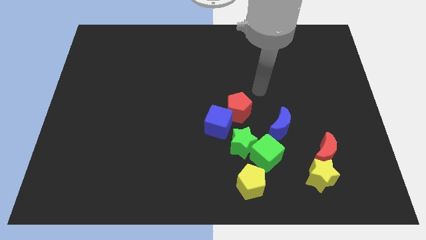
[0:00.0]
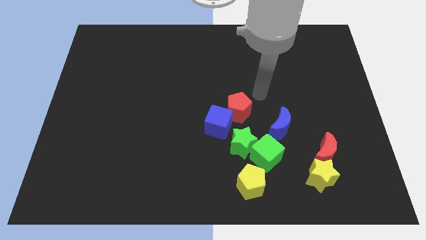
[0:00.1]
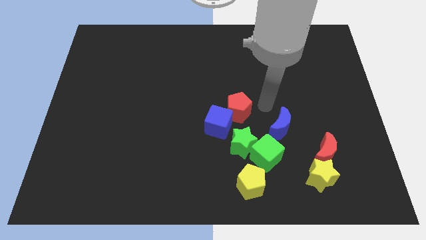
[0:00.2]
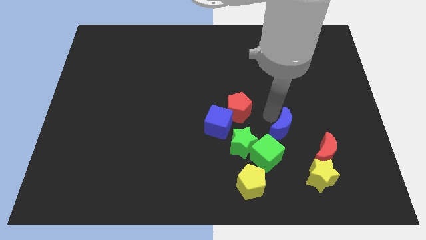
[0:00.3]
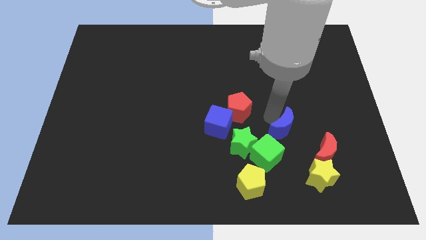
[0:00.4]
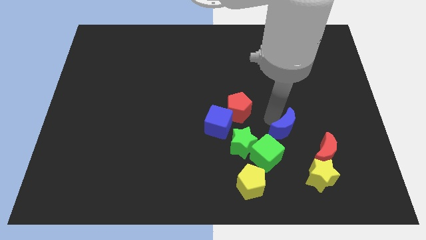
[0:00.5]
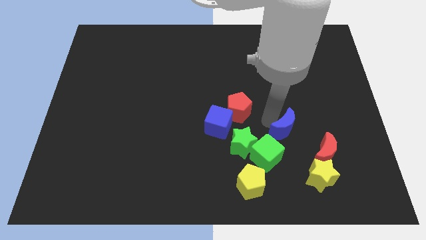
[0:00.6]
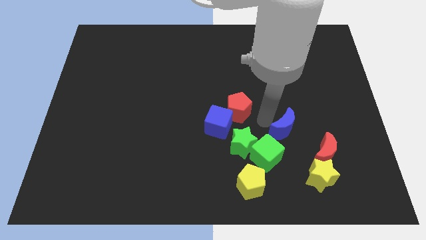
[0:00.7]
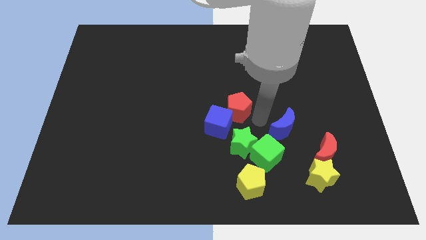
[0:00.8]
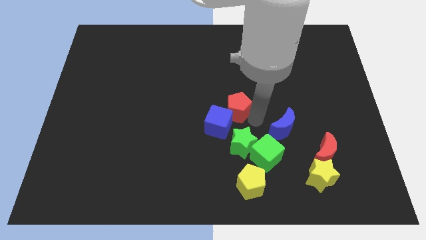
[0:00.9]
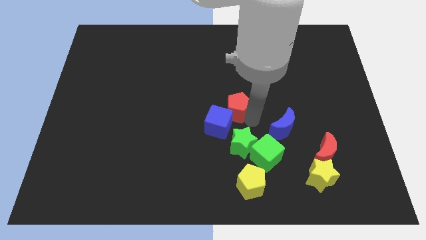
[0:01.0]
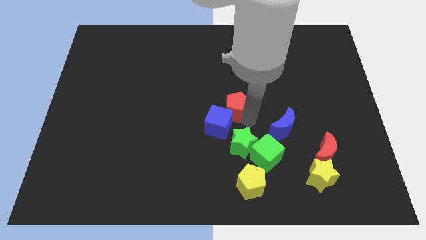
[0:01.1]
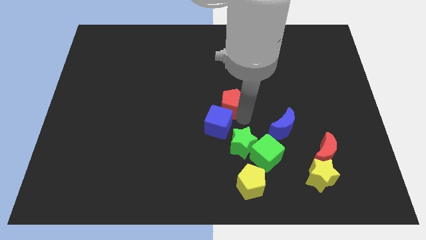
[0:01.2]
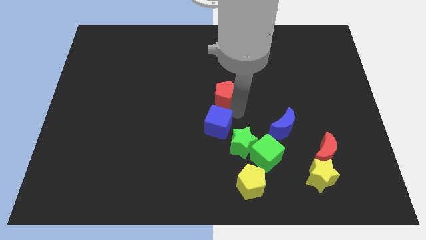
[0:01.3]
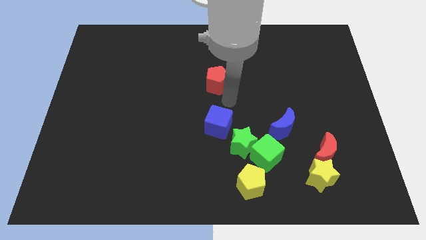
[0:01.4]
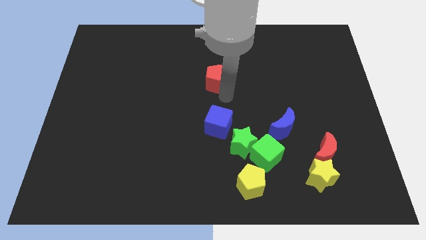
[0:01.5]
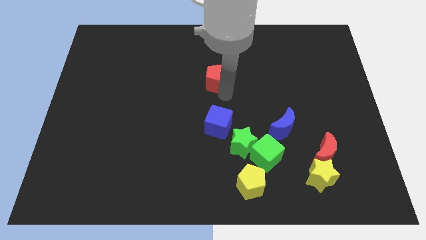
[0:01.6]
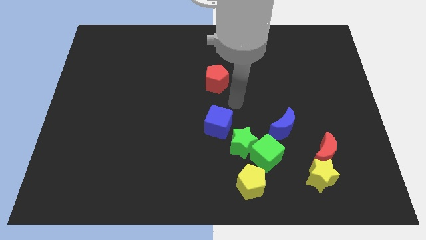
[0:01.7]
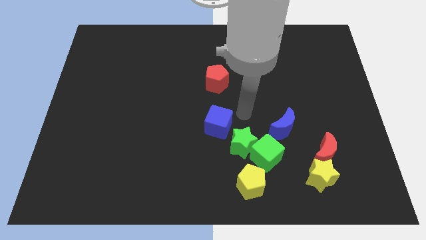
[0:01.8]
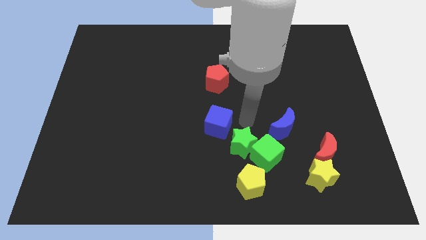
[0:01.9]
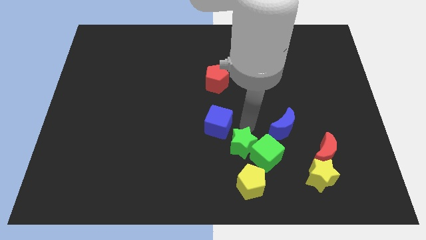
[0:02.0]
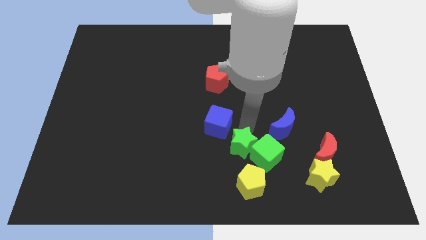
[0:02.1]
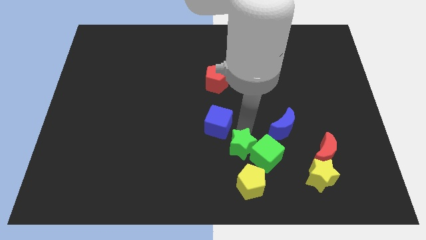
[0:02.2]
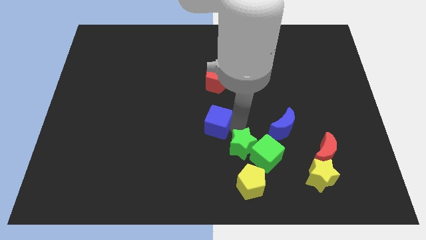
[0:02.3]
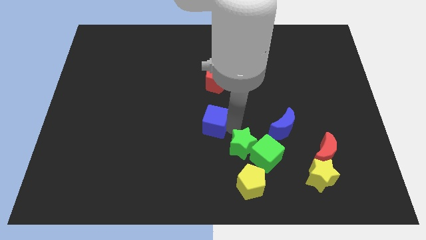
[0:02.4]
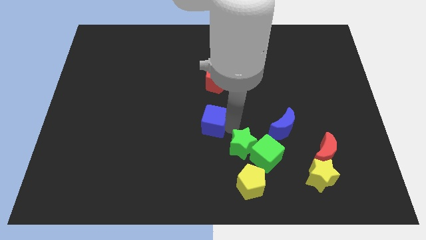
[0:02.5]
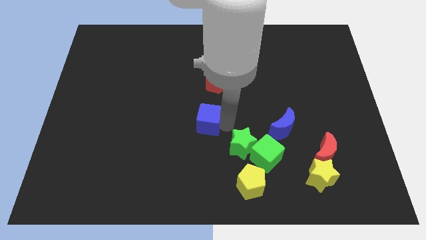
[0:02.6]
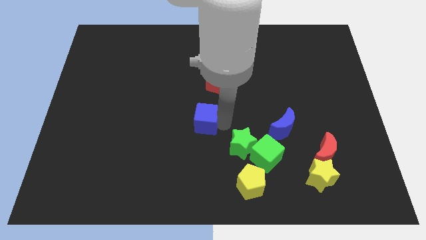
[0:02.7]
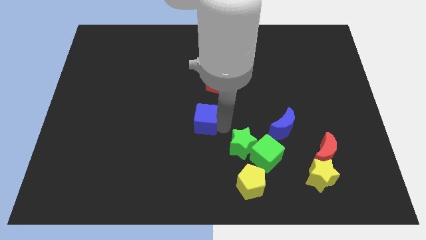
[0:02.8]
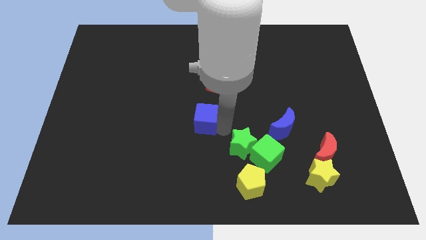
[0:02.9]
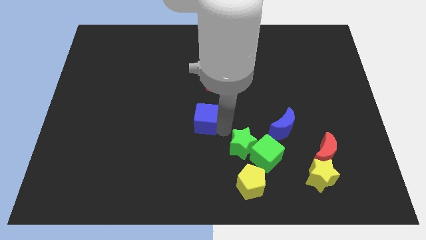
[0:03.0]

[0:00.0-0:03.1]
move the blue cube to the center of the board

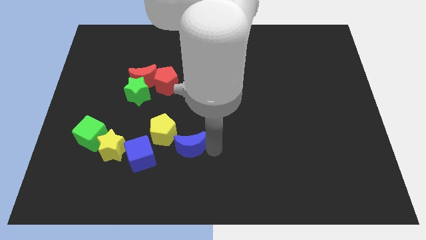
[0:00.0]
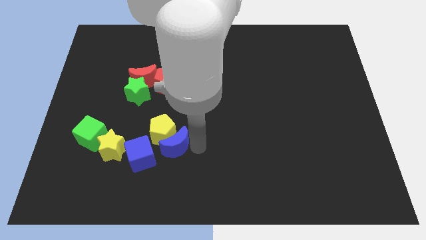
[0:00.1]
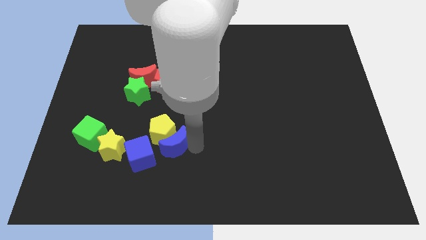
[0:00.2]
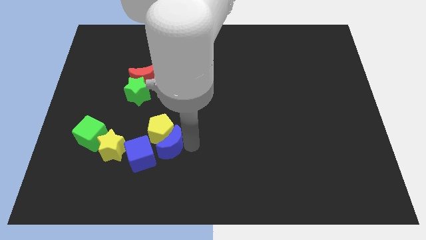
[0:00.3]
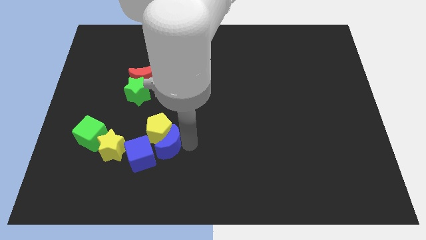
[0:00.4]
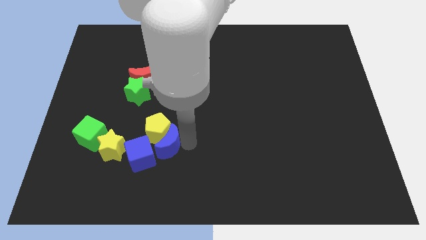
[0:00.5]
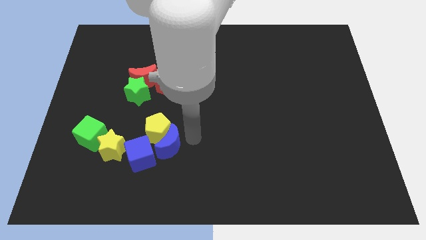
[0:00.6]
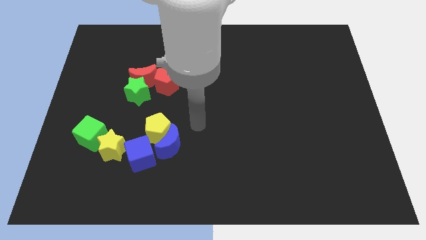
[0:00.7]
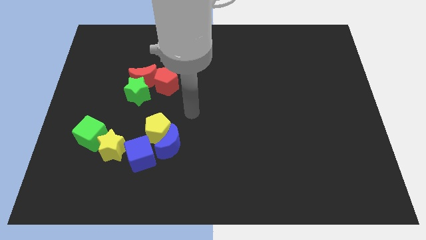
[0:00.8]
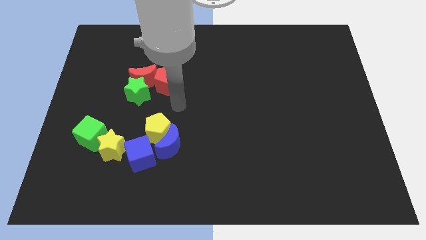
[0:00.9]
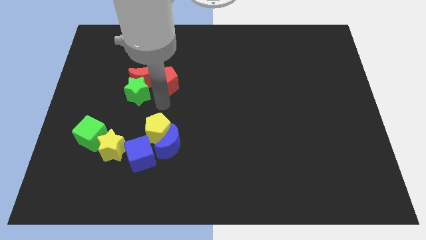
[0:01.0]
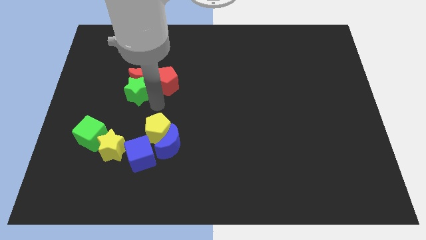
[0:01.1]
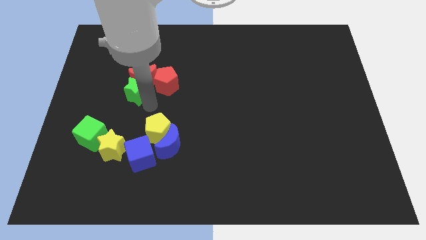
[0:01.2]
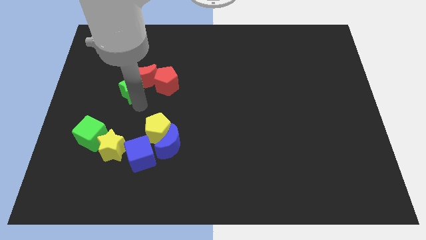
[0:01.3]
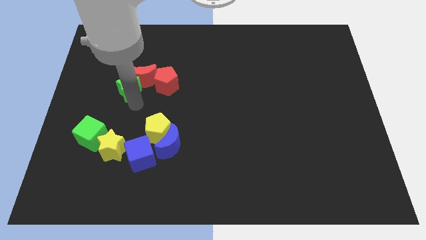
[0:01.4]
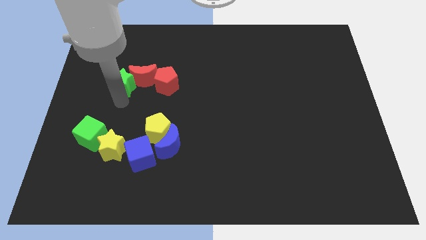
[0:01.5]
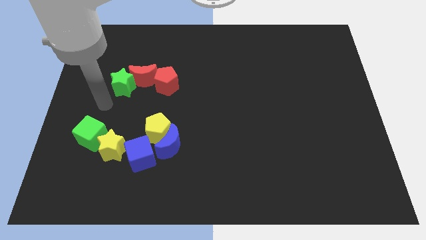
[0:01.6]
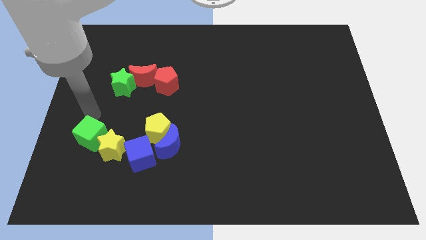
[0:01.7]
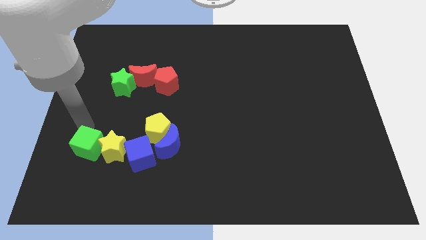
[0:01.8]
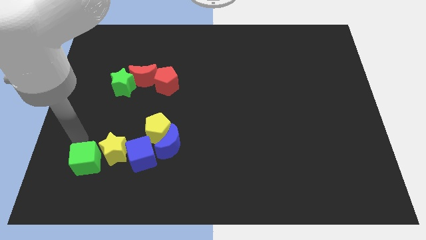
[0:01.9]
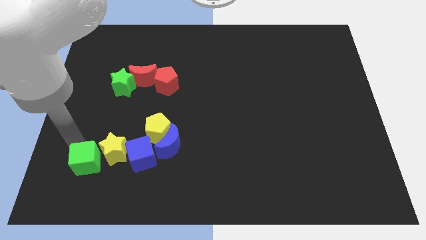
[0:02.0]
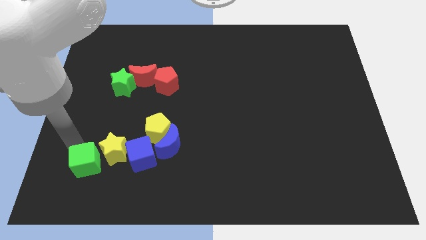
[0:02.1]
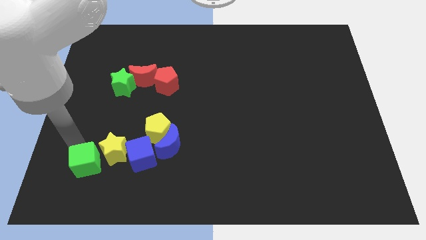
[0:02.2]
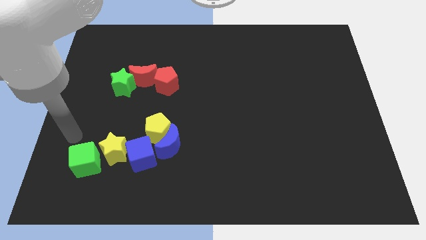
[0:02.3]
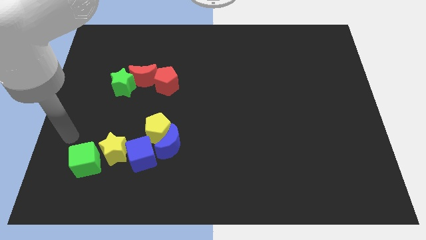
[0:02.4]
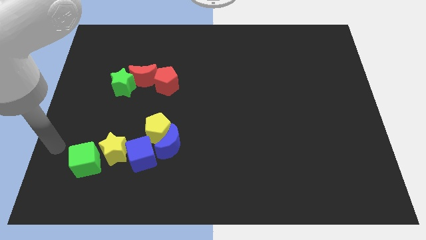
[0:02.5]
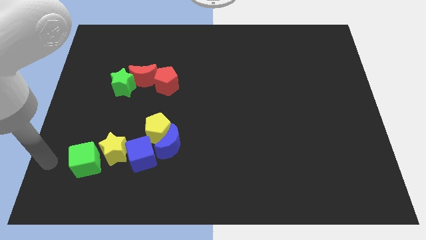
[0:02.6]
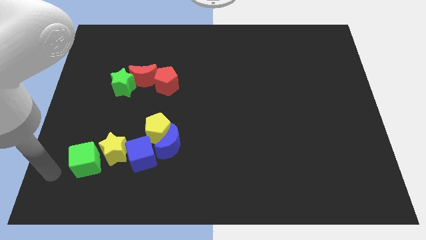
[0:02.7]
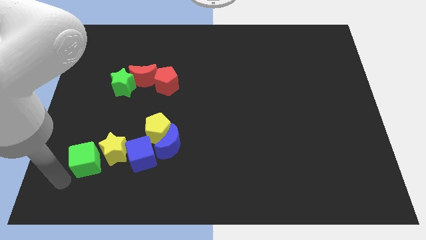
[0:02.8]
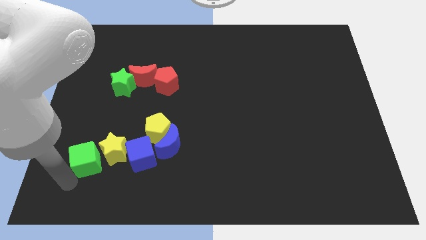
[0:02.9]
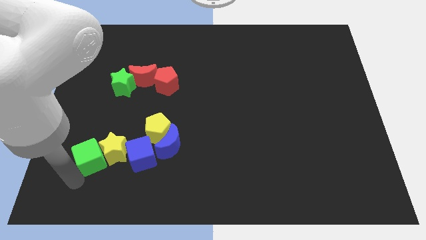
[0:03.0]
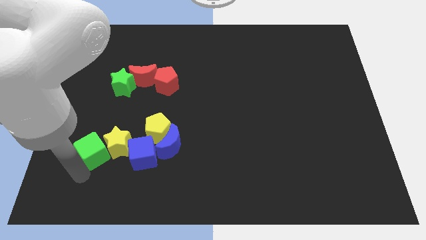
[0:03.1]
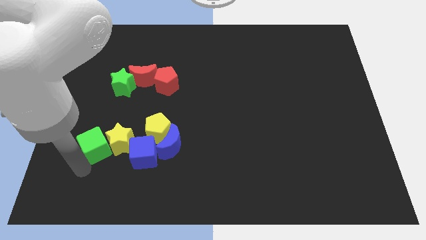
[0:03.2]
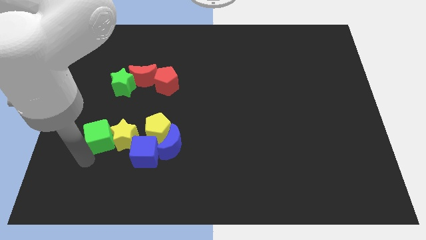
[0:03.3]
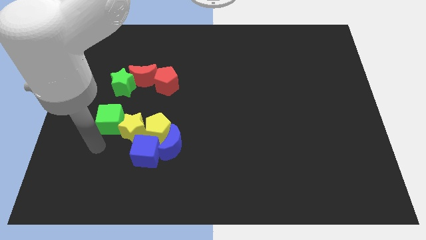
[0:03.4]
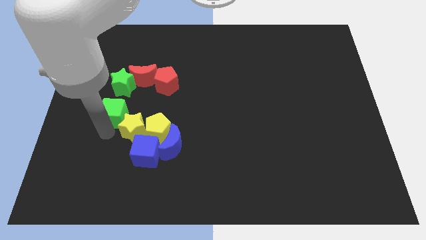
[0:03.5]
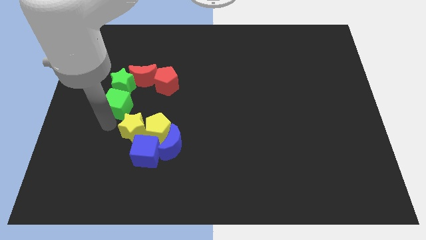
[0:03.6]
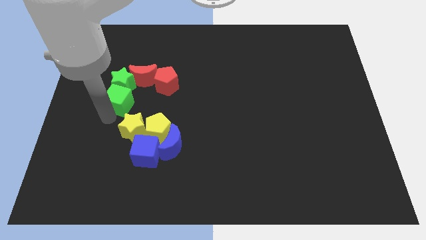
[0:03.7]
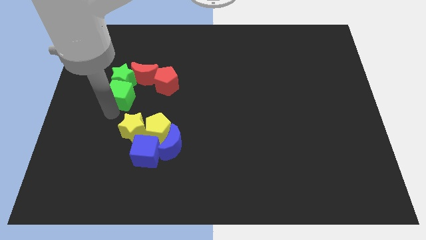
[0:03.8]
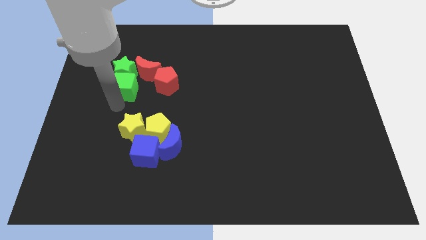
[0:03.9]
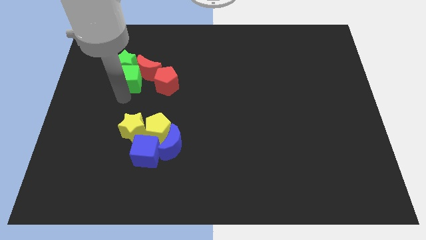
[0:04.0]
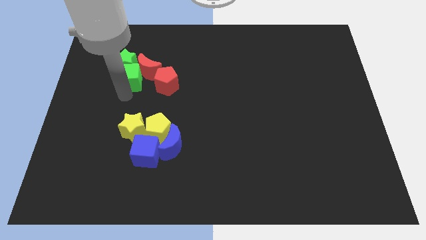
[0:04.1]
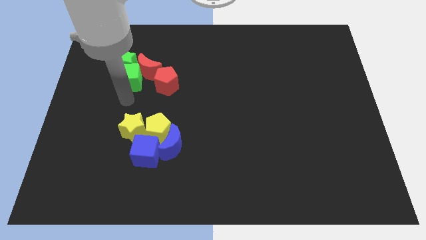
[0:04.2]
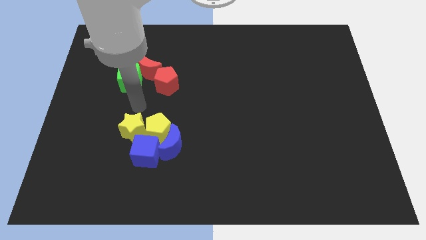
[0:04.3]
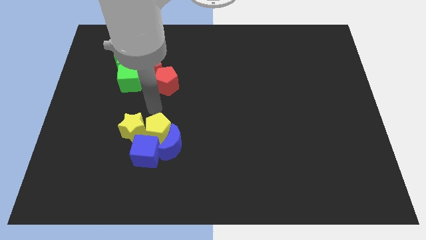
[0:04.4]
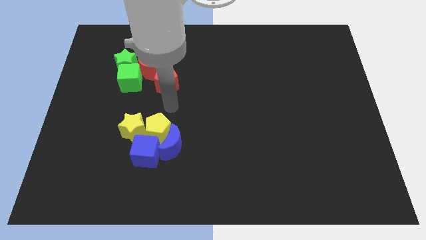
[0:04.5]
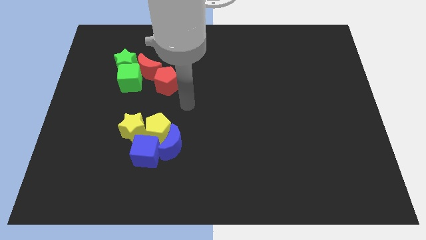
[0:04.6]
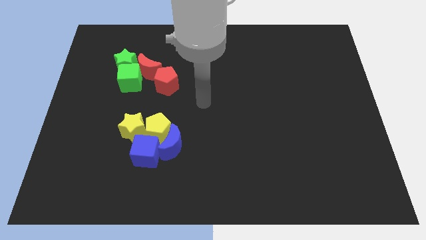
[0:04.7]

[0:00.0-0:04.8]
separate red blocks green blocks and yellow blocks blue blocks

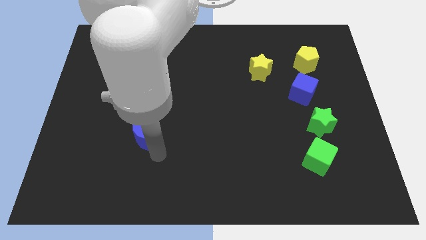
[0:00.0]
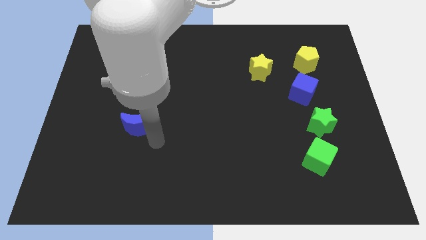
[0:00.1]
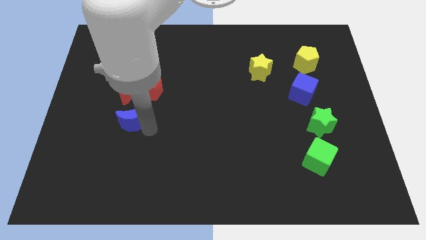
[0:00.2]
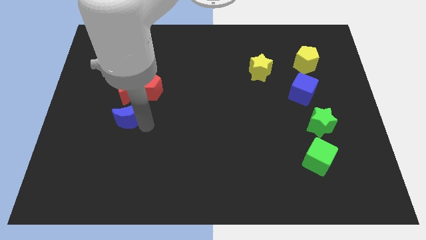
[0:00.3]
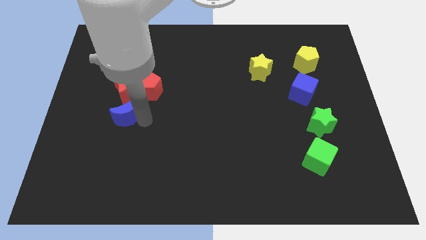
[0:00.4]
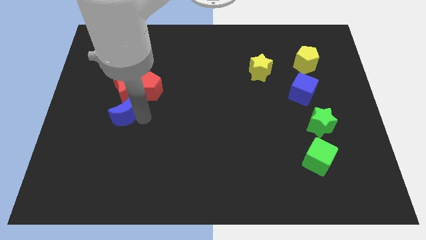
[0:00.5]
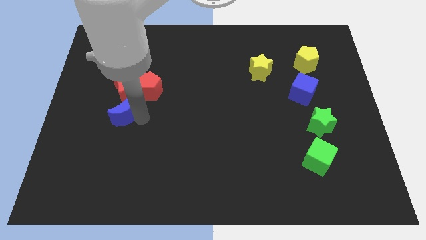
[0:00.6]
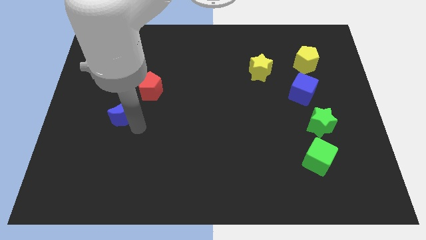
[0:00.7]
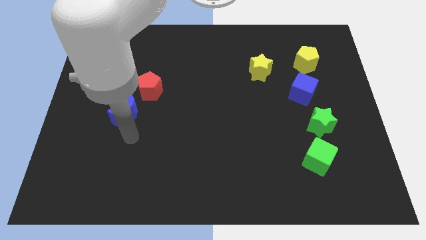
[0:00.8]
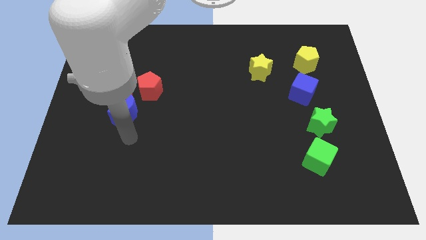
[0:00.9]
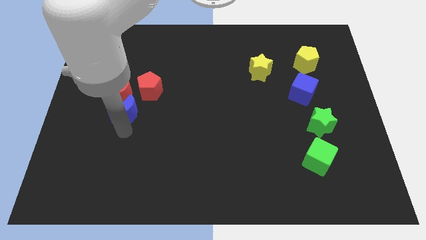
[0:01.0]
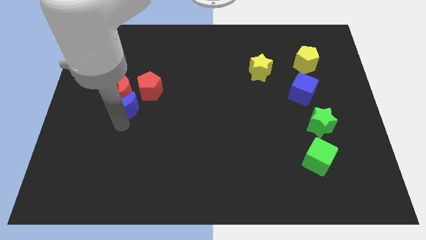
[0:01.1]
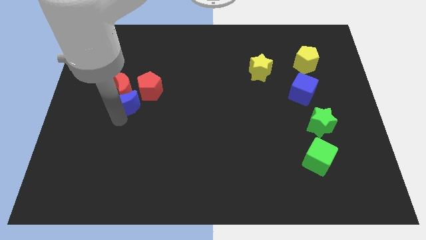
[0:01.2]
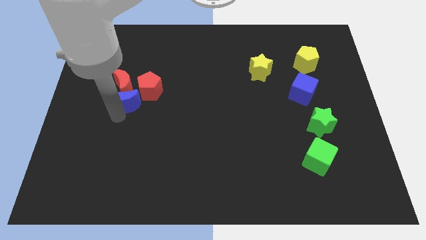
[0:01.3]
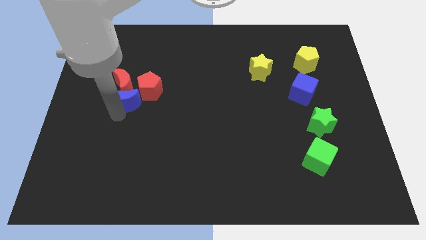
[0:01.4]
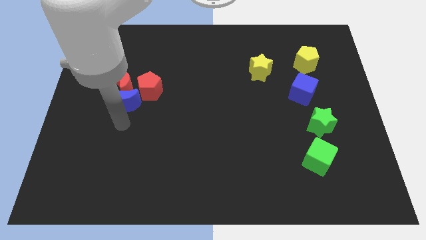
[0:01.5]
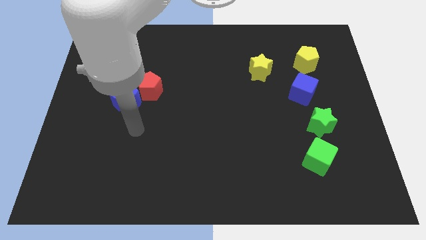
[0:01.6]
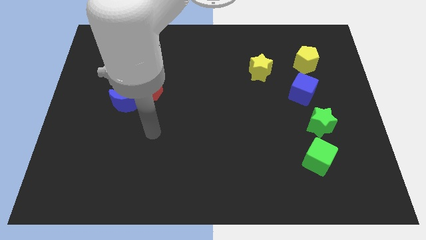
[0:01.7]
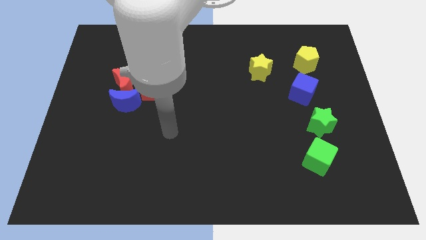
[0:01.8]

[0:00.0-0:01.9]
slide blue moon into the red moon
